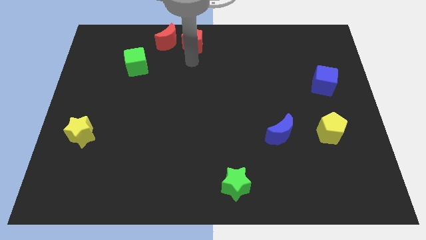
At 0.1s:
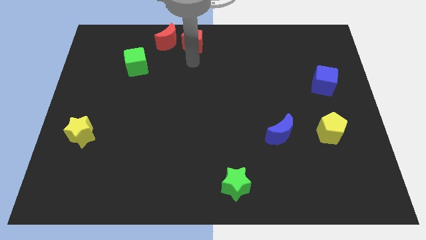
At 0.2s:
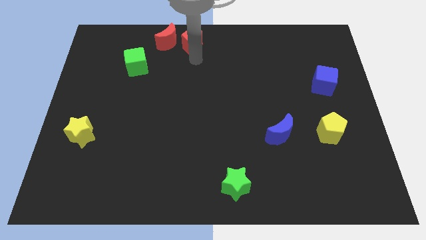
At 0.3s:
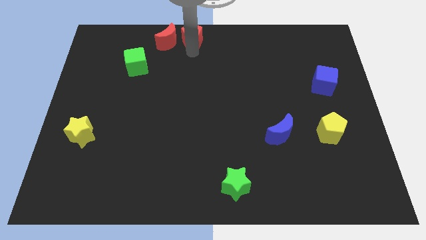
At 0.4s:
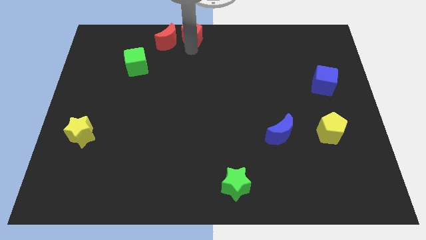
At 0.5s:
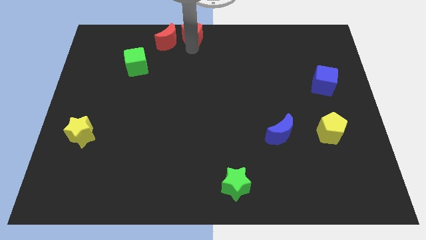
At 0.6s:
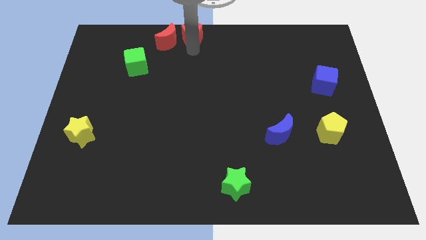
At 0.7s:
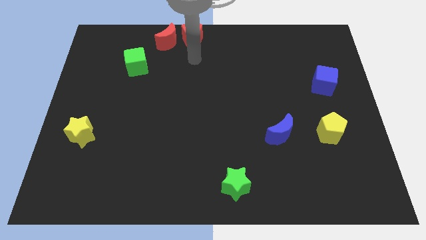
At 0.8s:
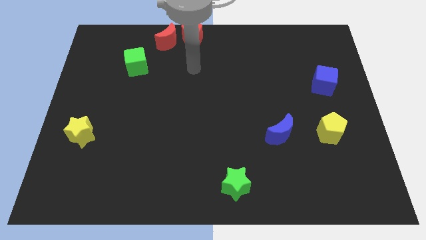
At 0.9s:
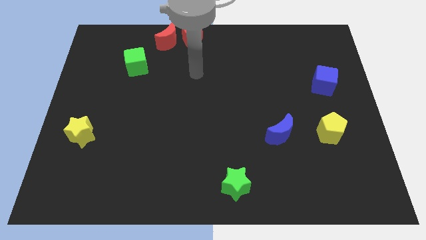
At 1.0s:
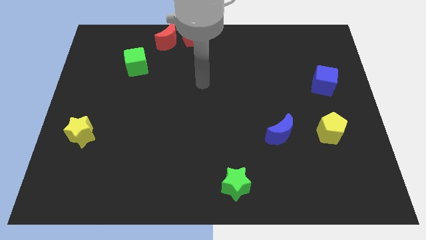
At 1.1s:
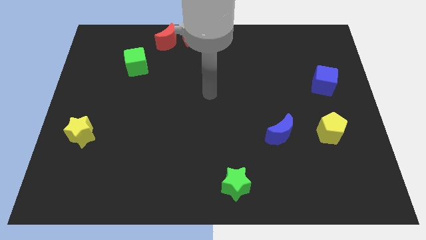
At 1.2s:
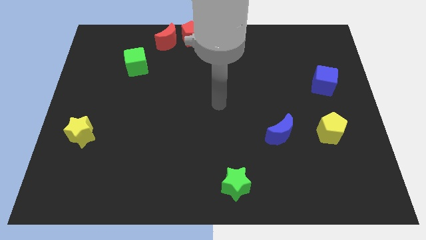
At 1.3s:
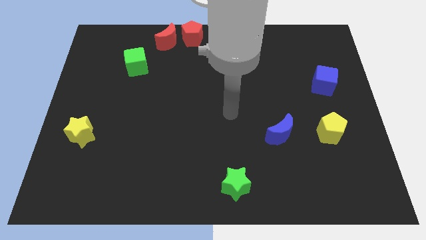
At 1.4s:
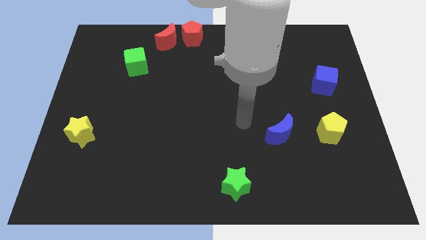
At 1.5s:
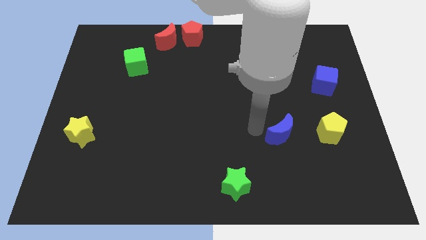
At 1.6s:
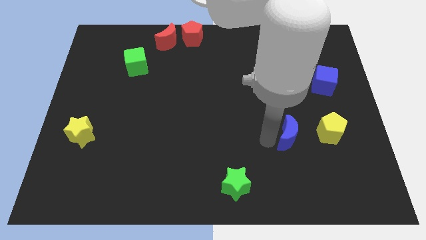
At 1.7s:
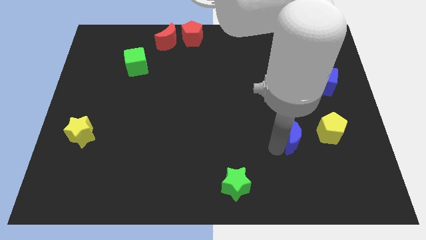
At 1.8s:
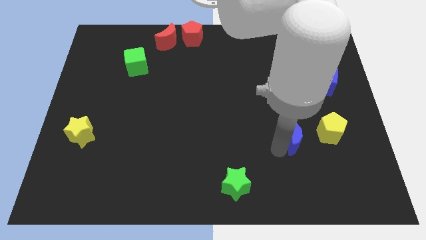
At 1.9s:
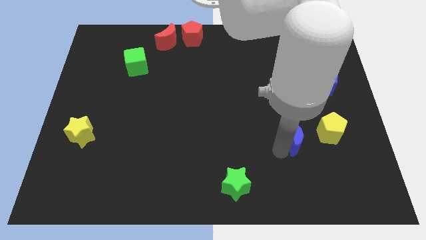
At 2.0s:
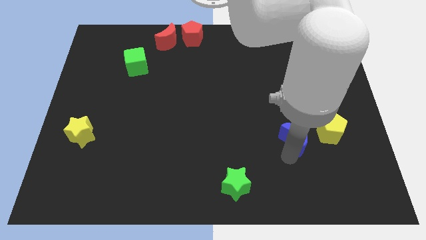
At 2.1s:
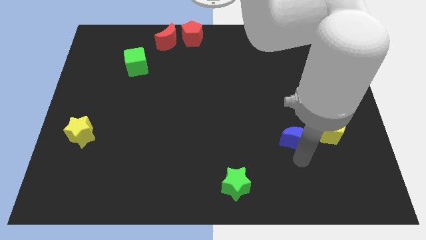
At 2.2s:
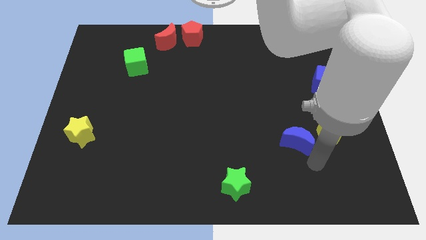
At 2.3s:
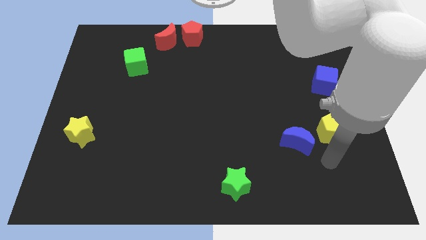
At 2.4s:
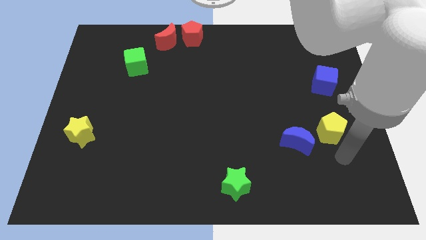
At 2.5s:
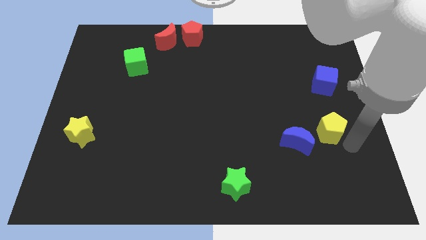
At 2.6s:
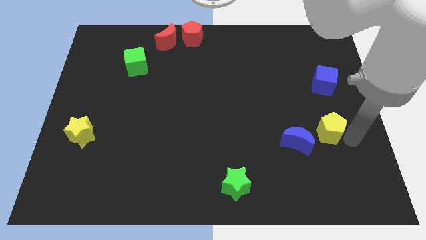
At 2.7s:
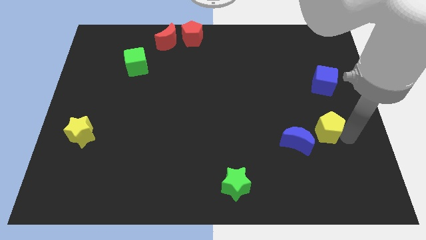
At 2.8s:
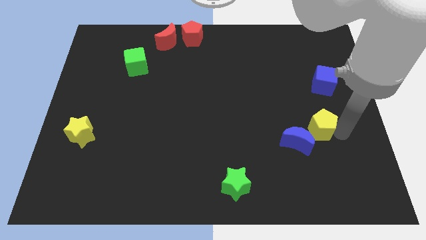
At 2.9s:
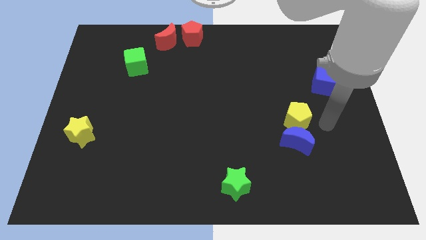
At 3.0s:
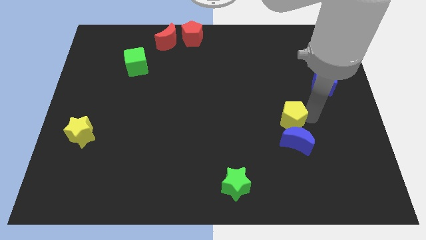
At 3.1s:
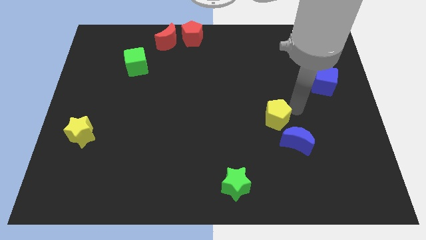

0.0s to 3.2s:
slide the yellow pentagon above the blue moon

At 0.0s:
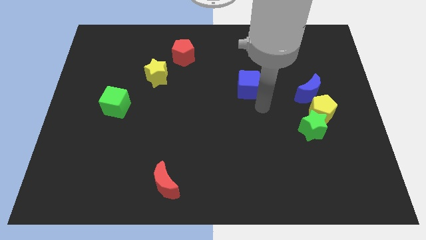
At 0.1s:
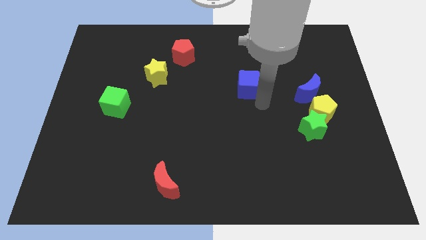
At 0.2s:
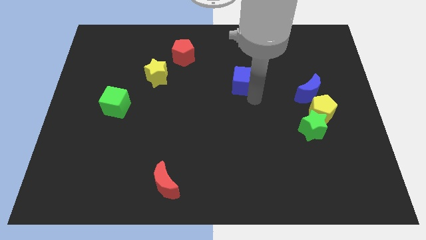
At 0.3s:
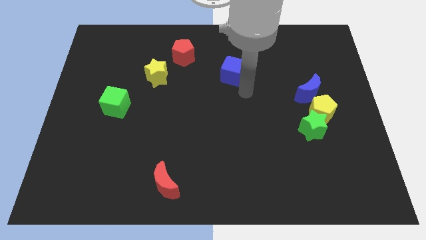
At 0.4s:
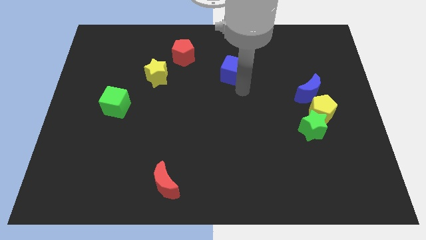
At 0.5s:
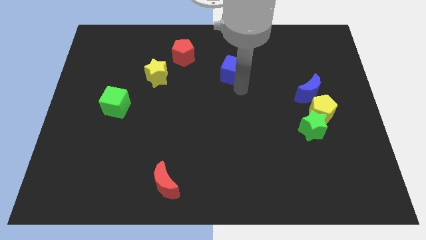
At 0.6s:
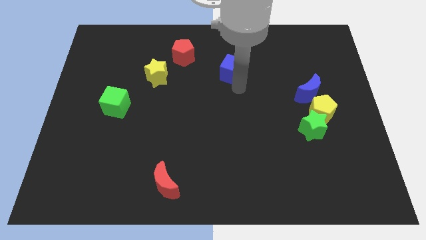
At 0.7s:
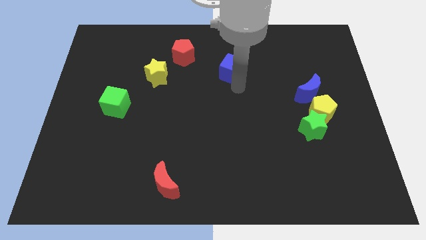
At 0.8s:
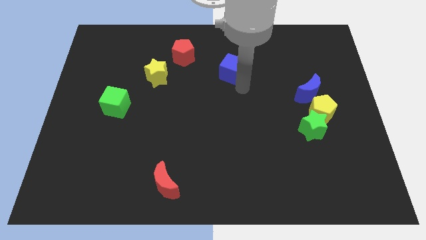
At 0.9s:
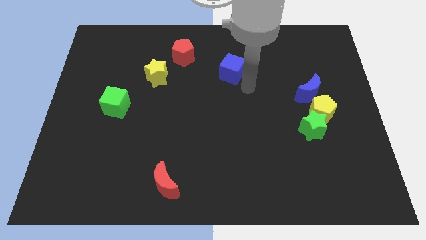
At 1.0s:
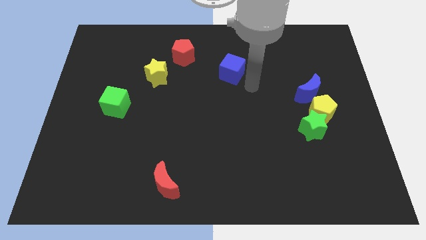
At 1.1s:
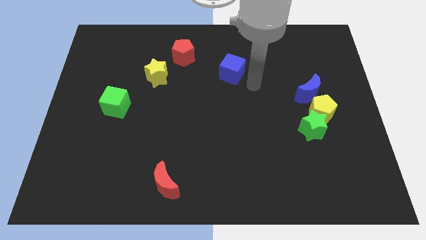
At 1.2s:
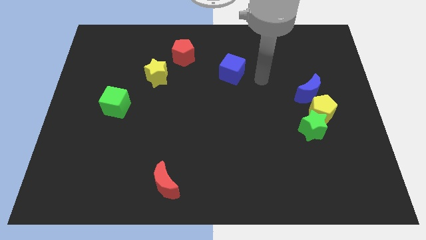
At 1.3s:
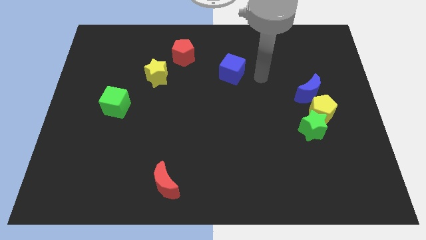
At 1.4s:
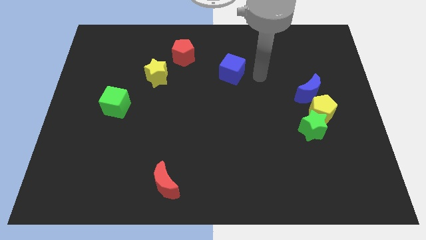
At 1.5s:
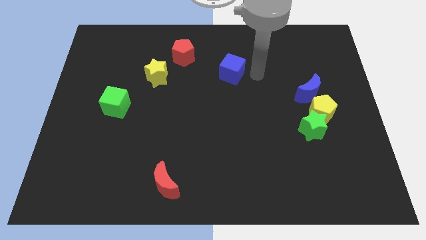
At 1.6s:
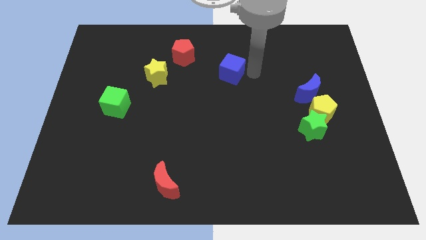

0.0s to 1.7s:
make a triangle out of blue cube yellow star and the red pentagon

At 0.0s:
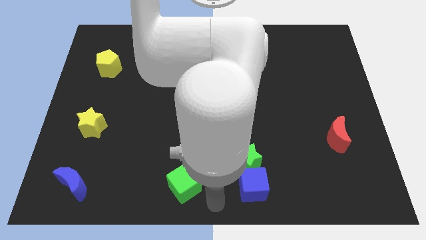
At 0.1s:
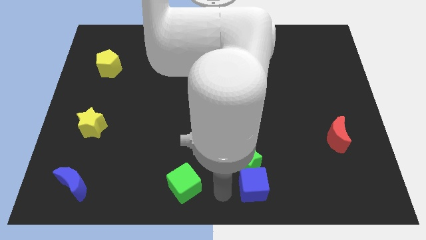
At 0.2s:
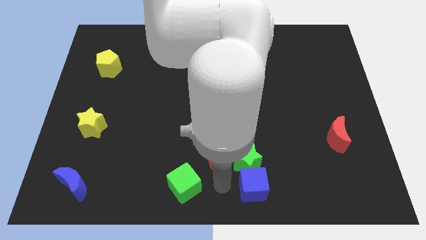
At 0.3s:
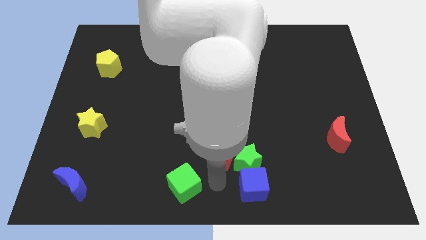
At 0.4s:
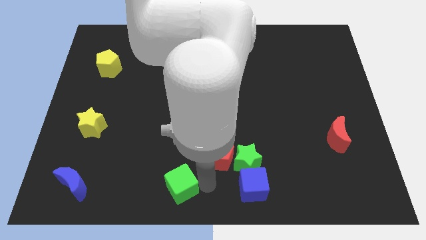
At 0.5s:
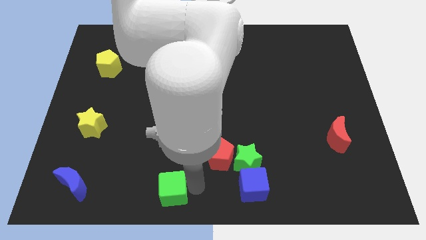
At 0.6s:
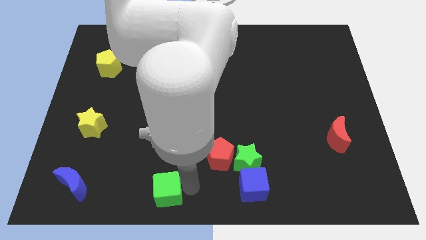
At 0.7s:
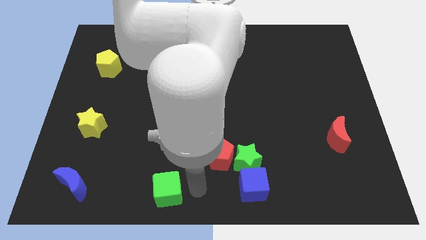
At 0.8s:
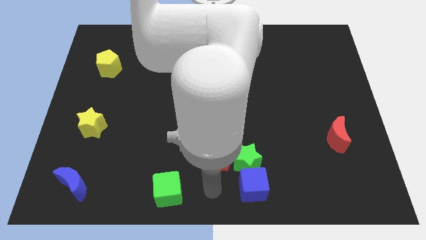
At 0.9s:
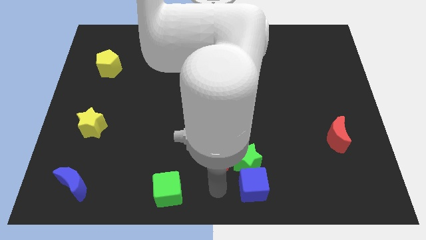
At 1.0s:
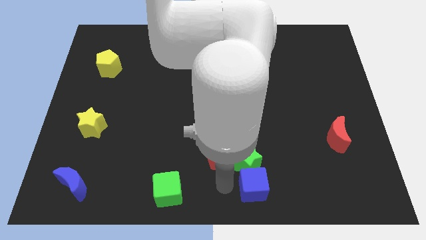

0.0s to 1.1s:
move the green cube to the right of the board

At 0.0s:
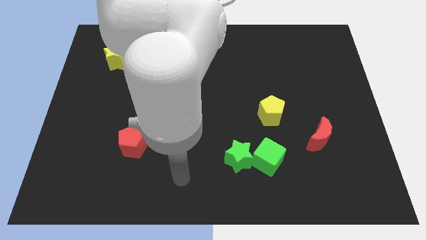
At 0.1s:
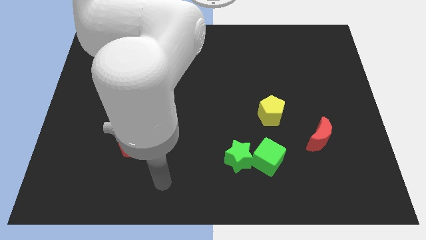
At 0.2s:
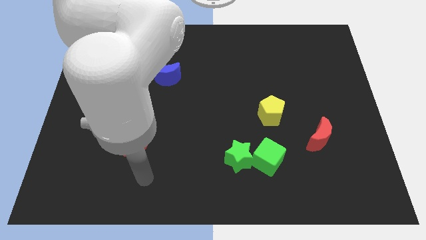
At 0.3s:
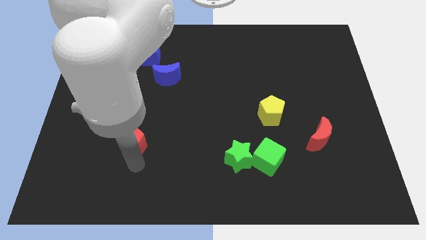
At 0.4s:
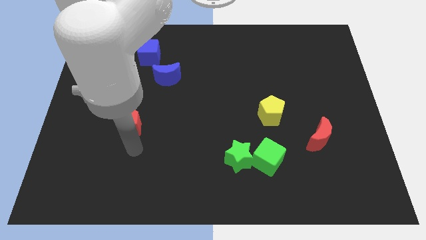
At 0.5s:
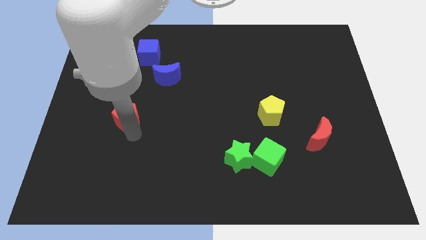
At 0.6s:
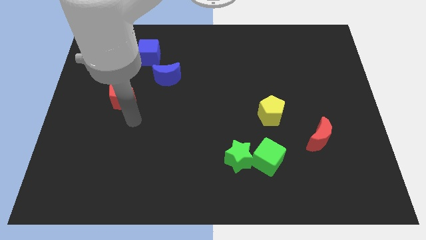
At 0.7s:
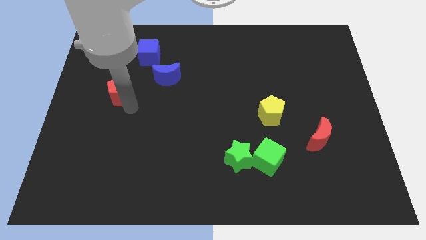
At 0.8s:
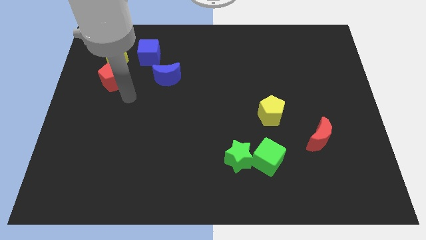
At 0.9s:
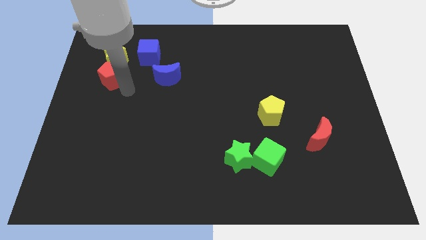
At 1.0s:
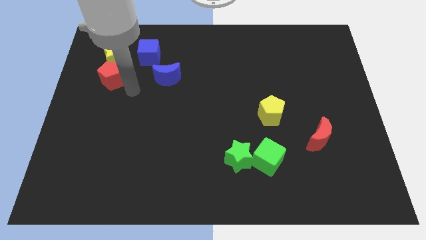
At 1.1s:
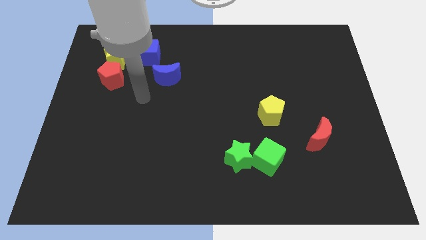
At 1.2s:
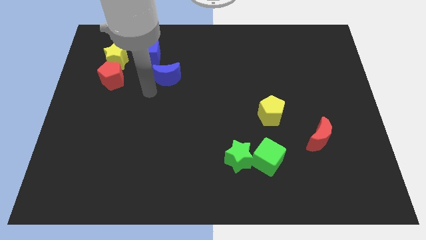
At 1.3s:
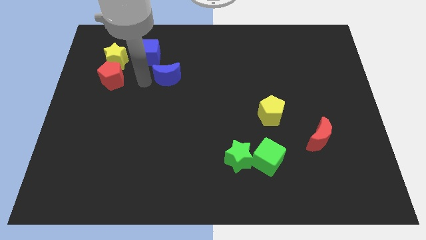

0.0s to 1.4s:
move red pentagon to the bottom of yellow star

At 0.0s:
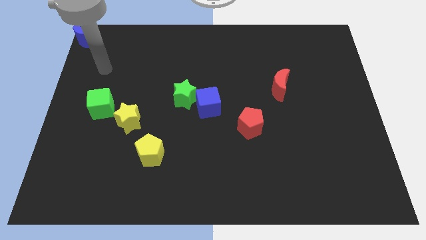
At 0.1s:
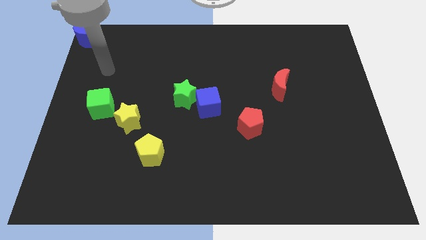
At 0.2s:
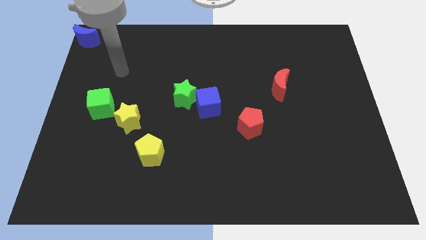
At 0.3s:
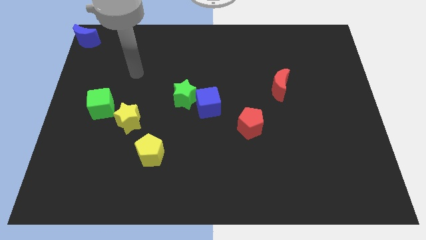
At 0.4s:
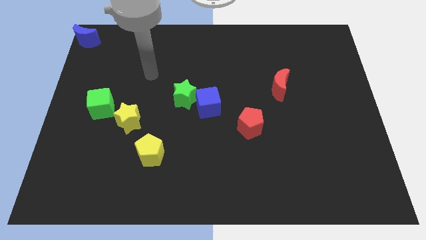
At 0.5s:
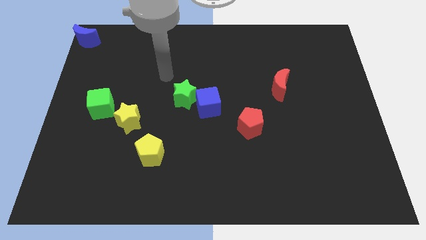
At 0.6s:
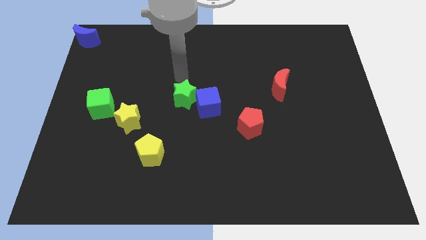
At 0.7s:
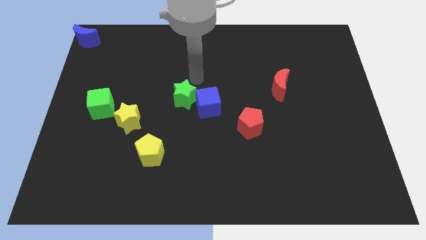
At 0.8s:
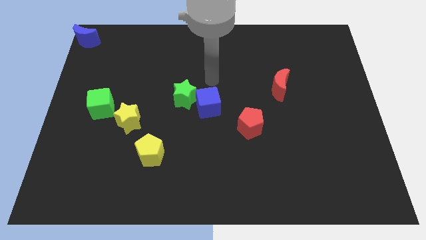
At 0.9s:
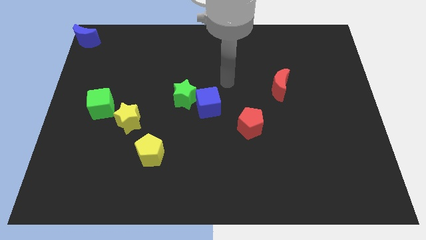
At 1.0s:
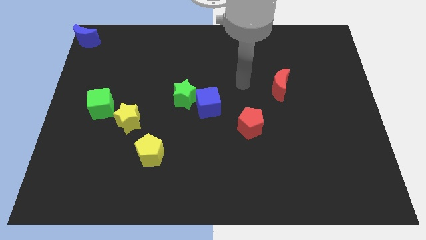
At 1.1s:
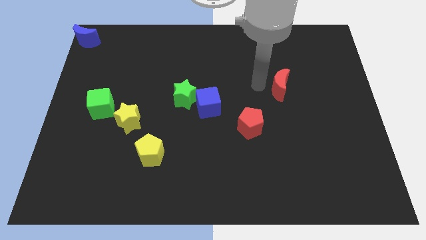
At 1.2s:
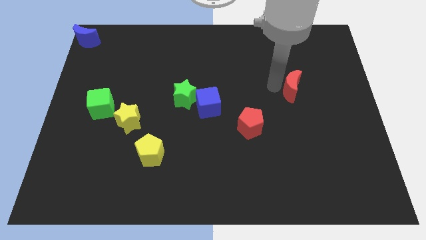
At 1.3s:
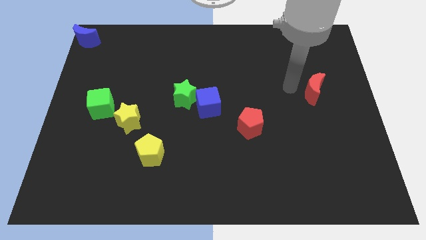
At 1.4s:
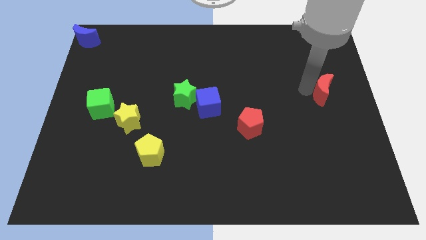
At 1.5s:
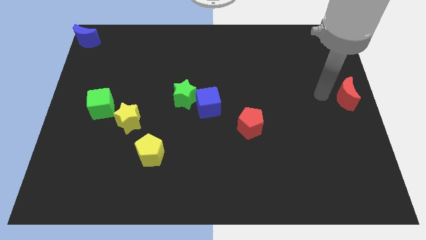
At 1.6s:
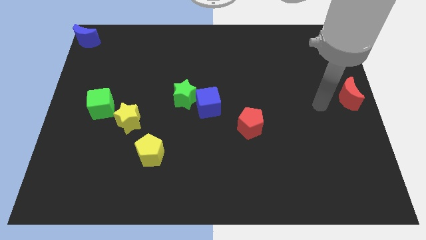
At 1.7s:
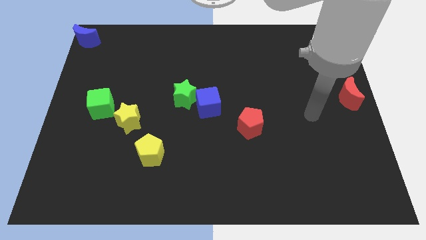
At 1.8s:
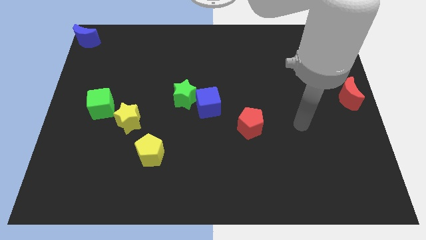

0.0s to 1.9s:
slide the red crescent towards the center right
